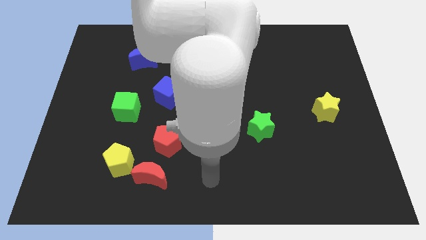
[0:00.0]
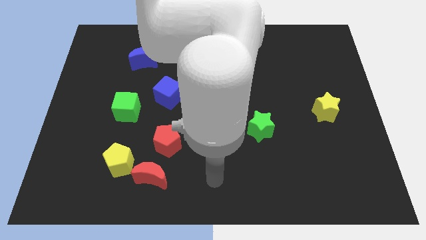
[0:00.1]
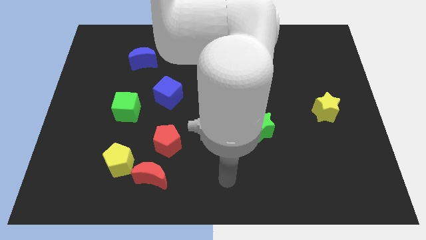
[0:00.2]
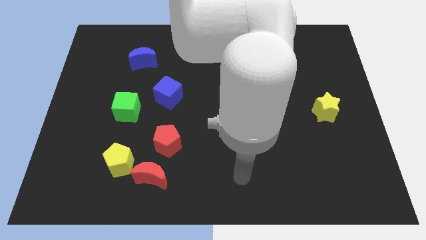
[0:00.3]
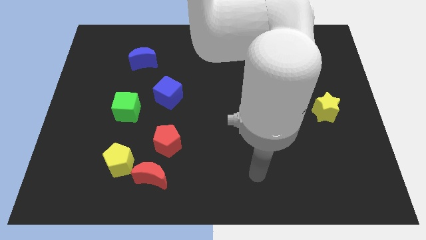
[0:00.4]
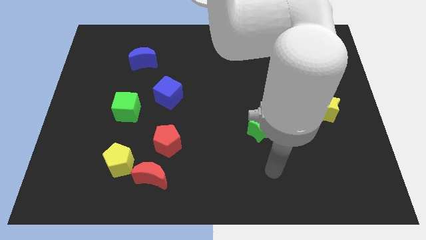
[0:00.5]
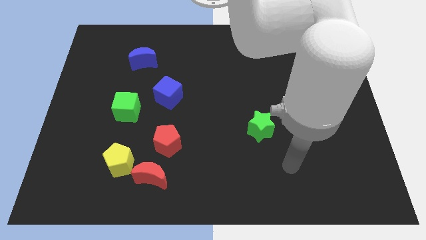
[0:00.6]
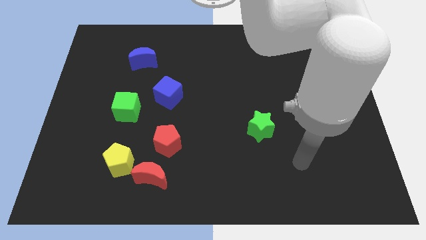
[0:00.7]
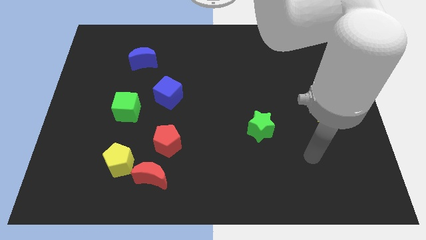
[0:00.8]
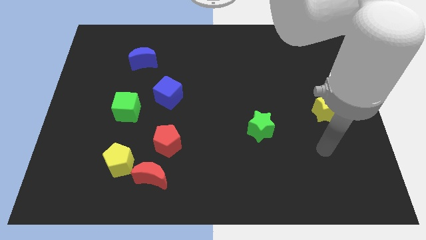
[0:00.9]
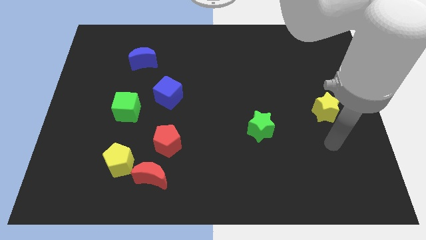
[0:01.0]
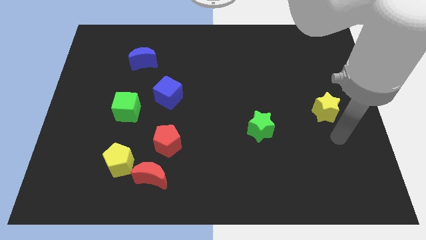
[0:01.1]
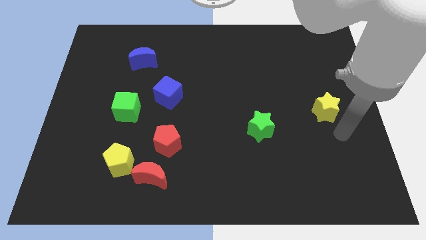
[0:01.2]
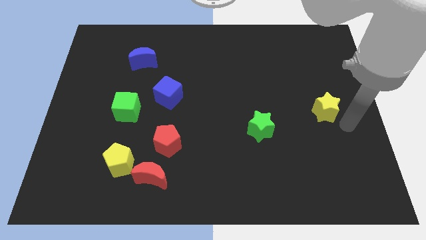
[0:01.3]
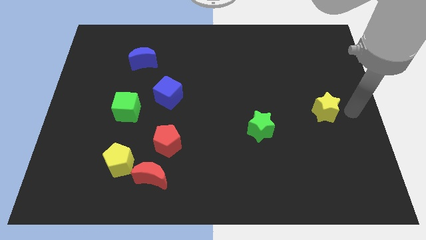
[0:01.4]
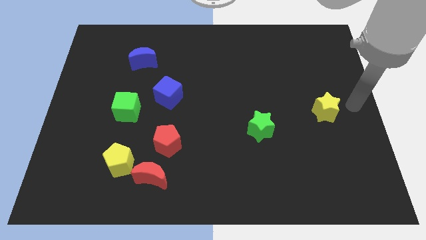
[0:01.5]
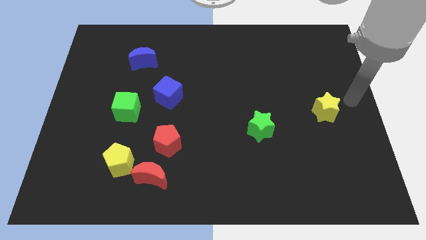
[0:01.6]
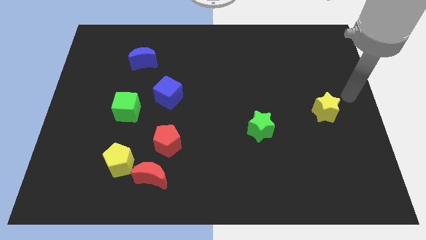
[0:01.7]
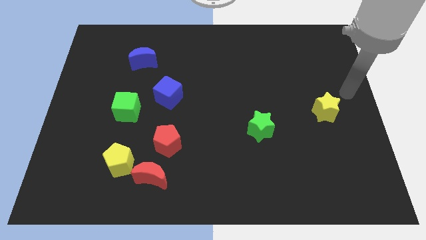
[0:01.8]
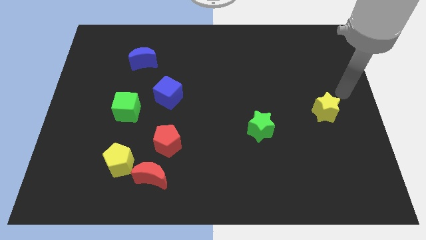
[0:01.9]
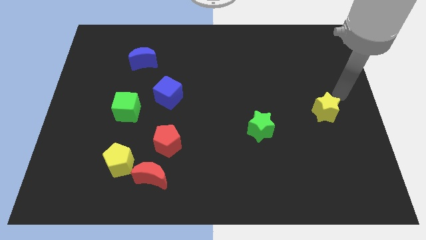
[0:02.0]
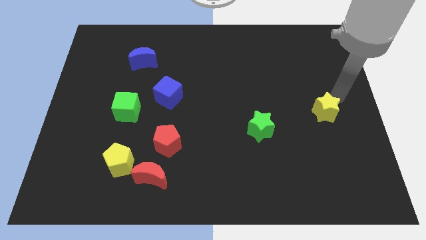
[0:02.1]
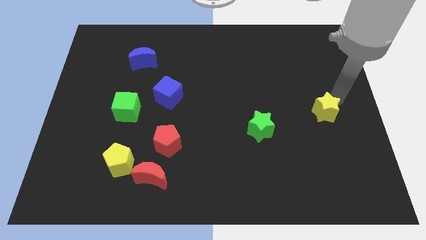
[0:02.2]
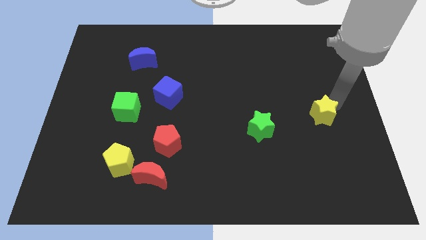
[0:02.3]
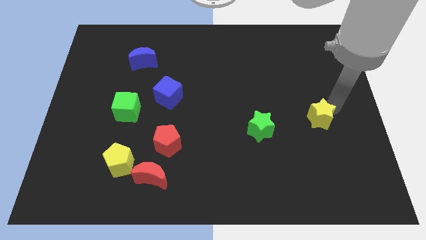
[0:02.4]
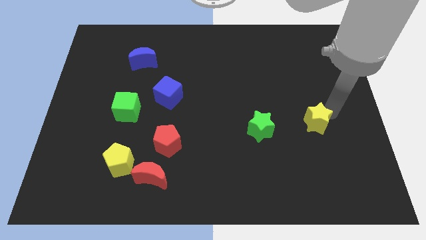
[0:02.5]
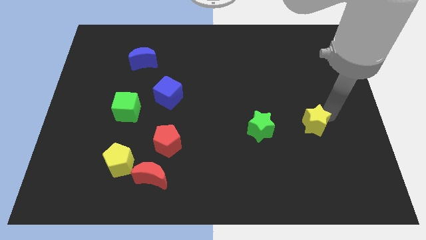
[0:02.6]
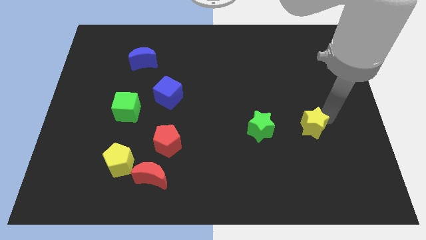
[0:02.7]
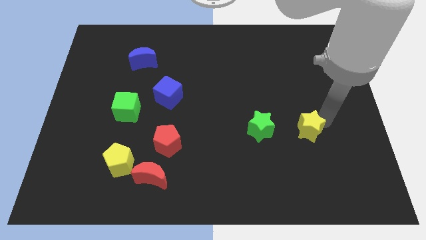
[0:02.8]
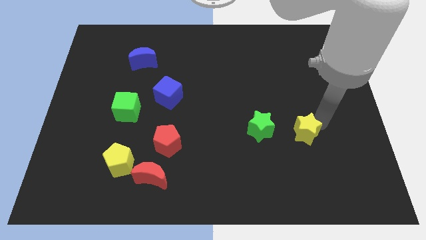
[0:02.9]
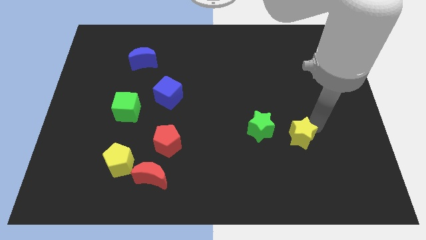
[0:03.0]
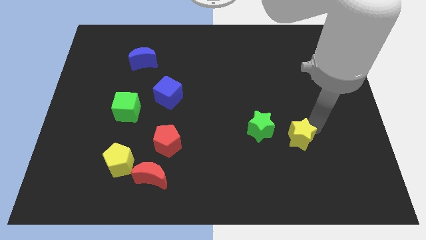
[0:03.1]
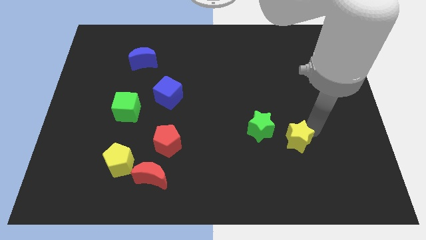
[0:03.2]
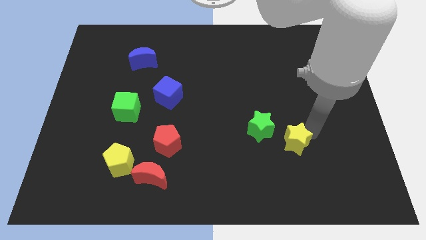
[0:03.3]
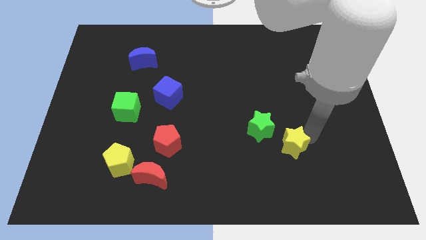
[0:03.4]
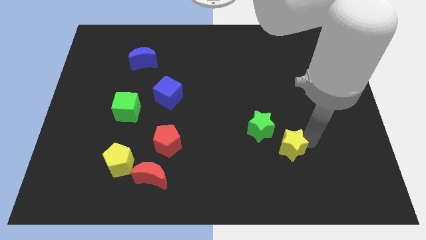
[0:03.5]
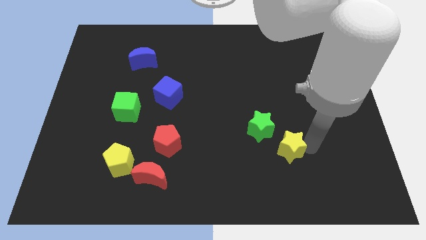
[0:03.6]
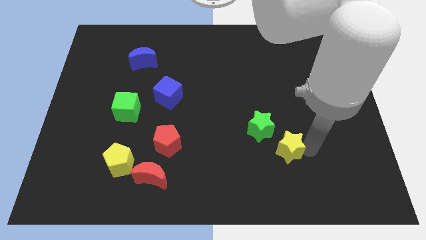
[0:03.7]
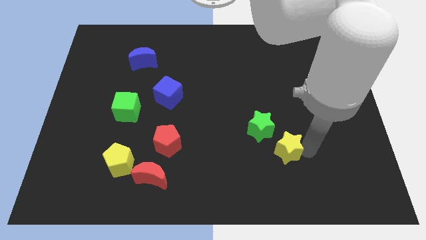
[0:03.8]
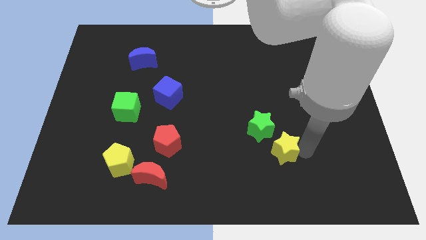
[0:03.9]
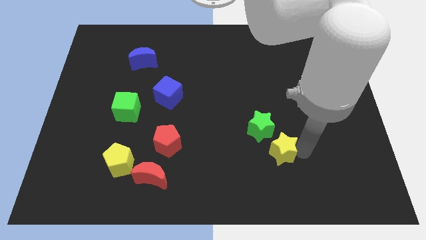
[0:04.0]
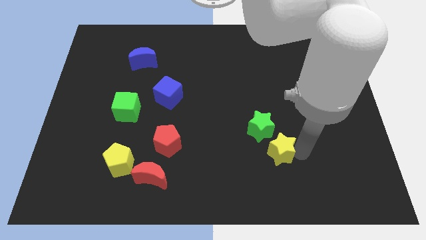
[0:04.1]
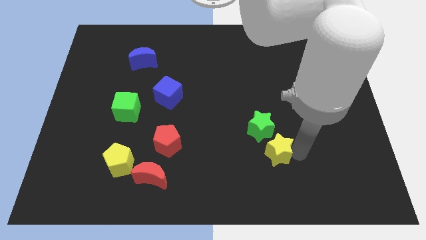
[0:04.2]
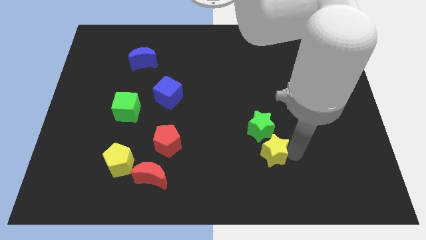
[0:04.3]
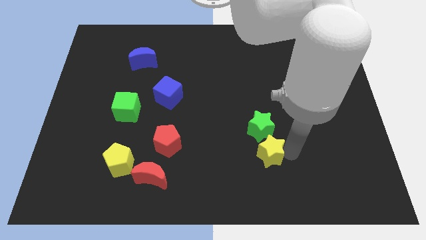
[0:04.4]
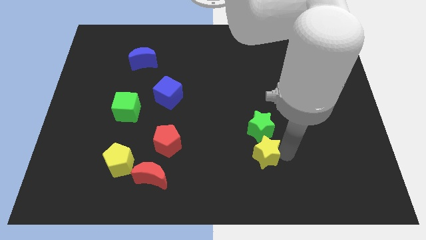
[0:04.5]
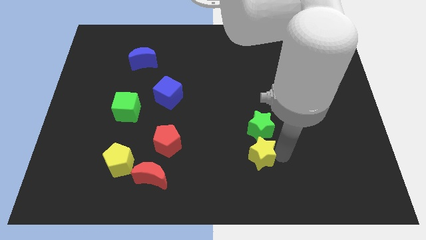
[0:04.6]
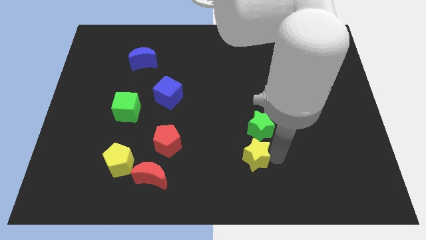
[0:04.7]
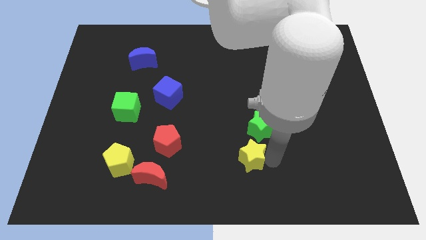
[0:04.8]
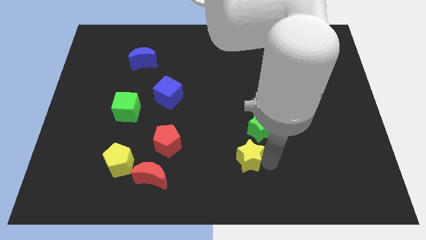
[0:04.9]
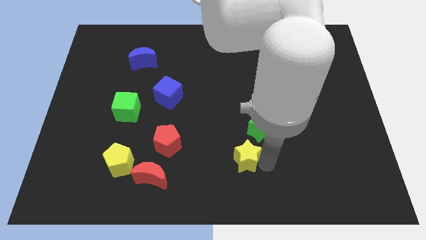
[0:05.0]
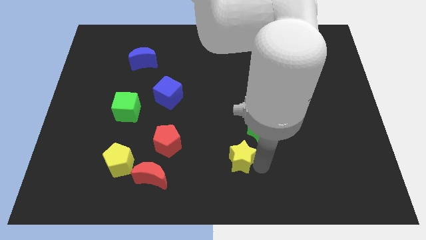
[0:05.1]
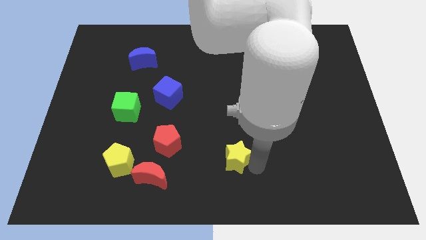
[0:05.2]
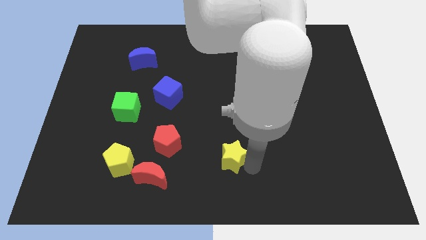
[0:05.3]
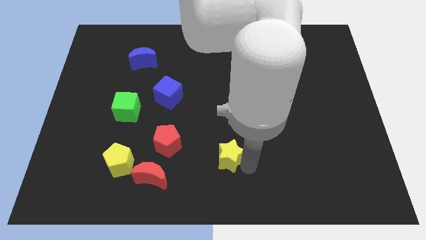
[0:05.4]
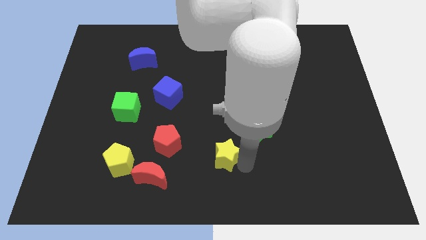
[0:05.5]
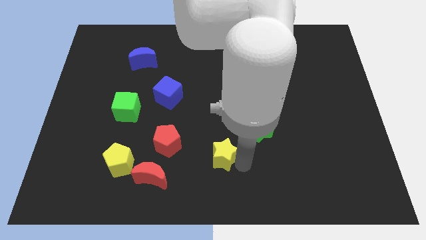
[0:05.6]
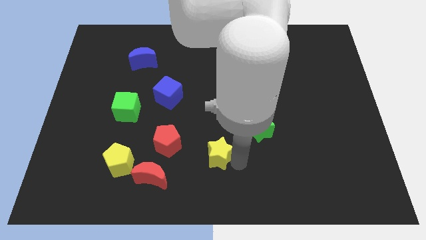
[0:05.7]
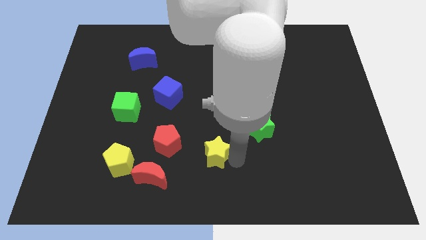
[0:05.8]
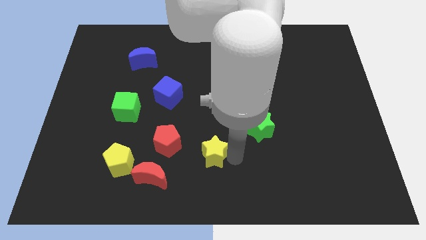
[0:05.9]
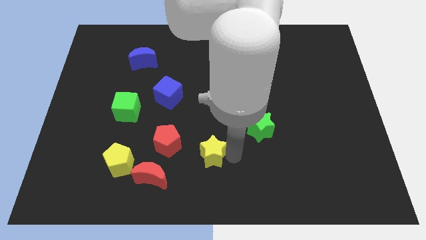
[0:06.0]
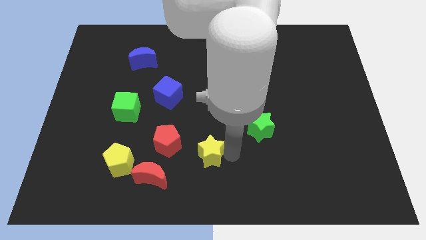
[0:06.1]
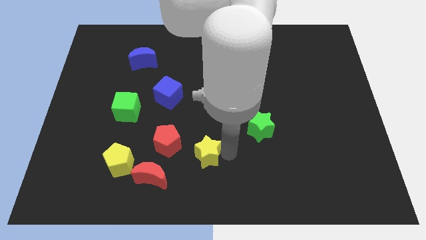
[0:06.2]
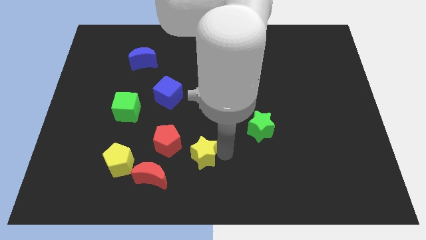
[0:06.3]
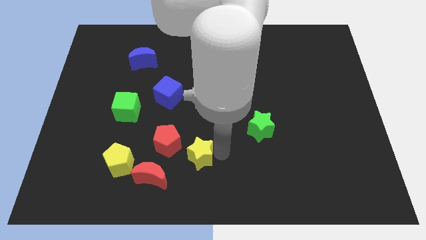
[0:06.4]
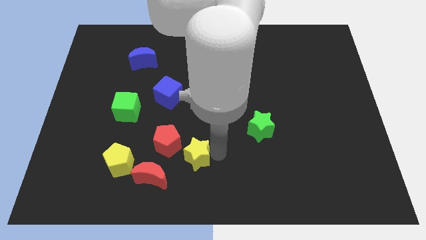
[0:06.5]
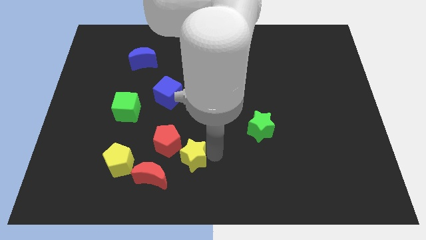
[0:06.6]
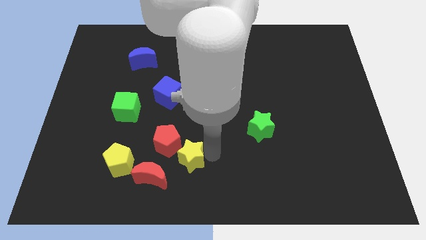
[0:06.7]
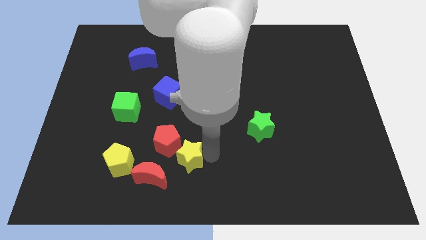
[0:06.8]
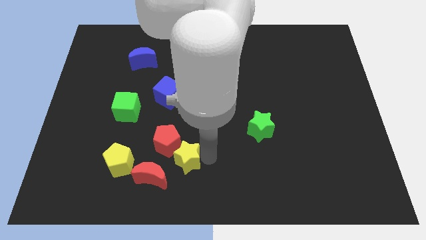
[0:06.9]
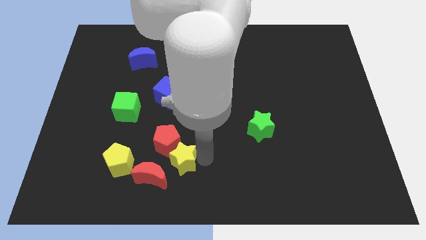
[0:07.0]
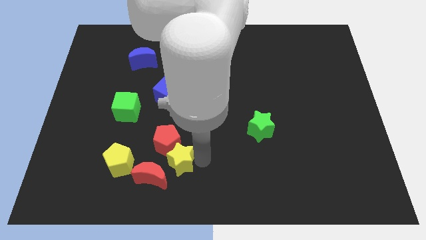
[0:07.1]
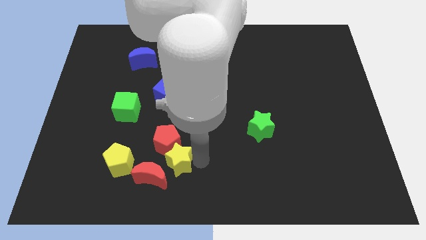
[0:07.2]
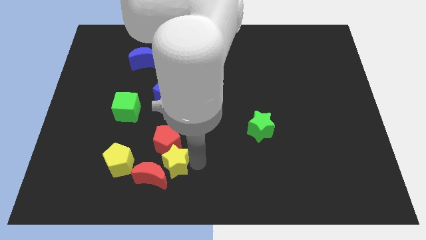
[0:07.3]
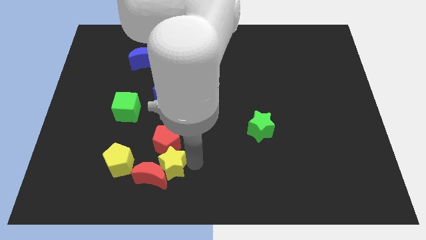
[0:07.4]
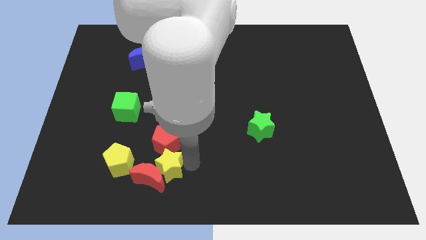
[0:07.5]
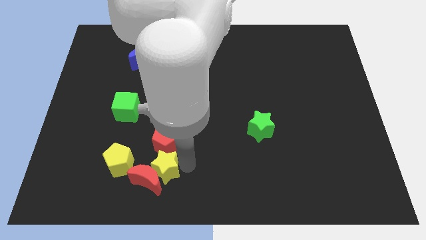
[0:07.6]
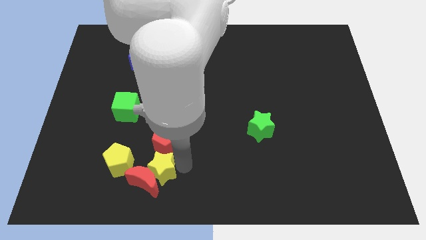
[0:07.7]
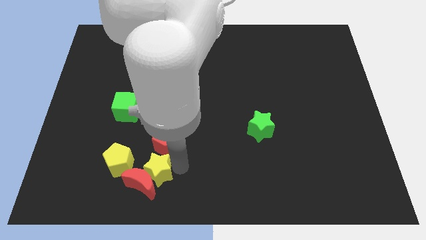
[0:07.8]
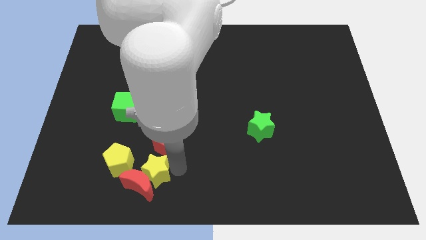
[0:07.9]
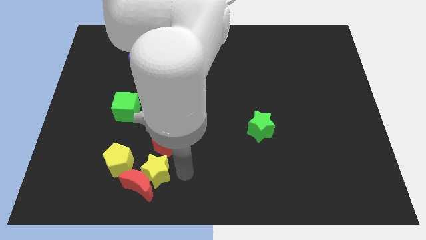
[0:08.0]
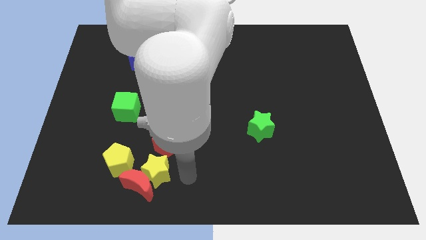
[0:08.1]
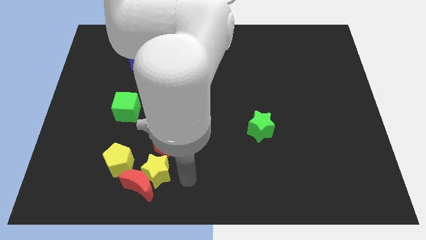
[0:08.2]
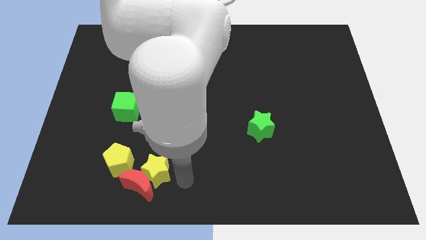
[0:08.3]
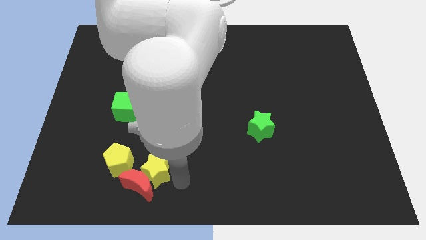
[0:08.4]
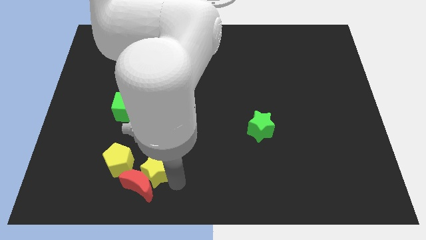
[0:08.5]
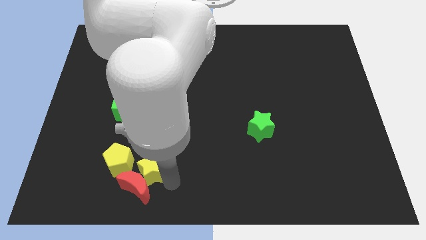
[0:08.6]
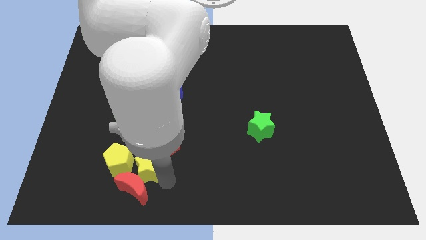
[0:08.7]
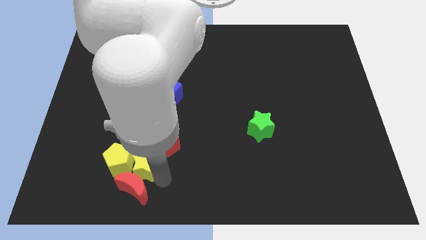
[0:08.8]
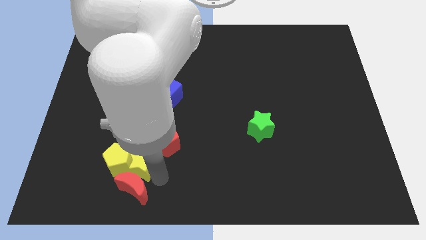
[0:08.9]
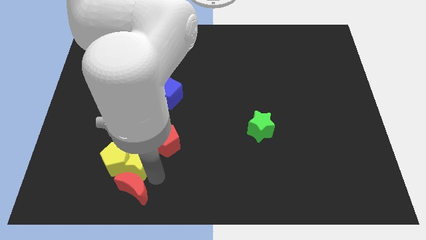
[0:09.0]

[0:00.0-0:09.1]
move the yellow star towards the yellow pentagon
